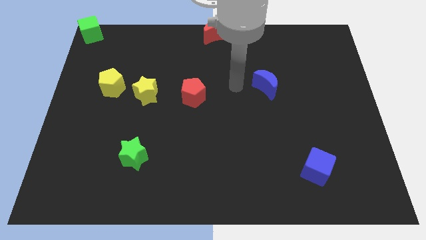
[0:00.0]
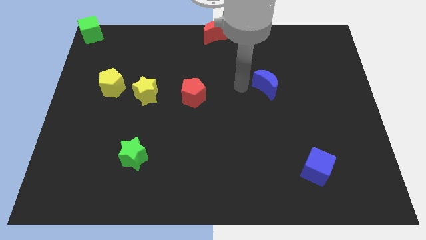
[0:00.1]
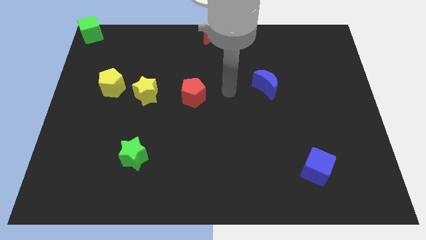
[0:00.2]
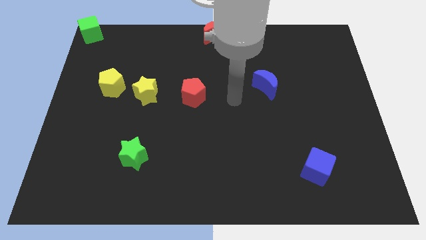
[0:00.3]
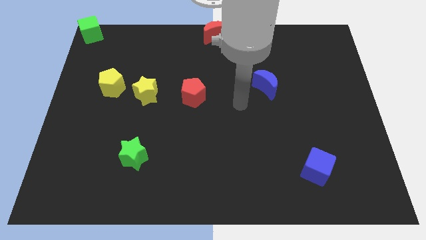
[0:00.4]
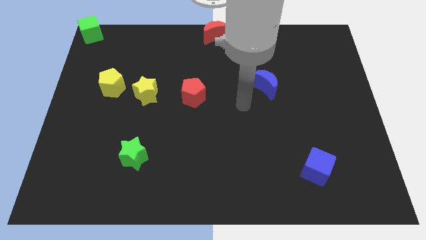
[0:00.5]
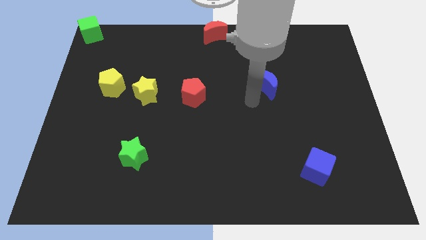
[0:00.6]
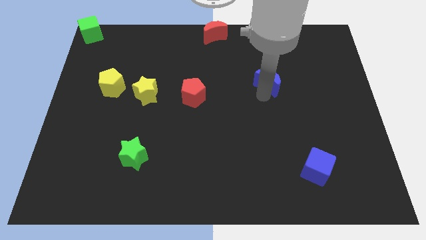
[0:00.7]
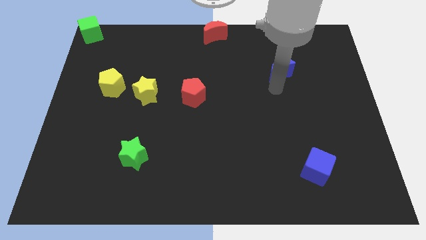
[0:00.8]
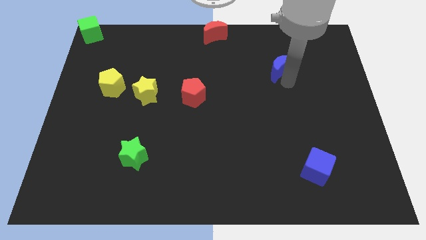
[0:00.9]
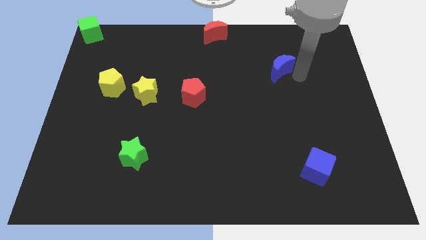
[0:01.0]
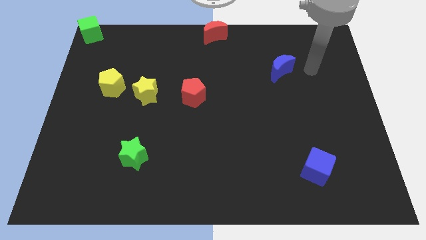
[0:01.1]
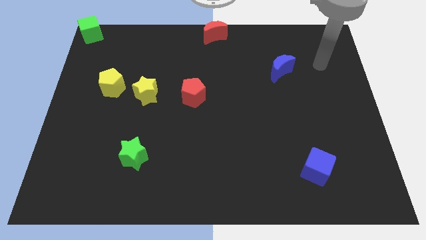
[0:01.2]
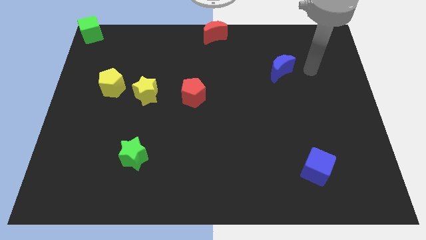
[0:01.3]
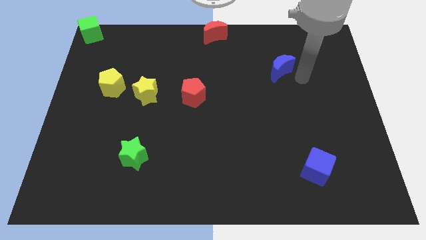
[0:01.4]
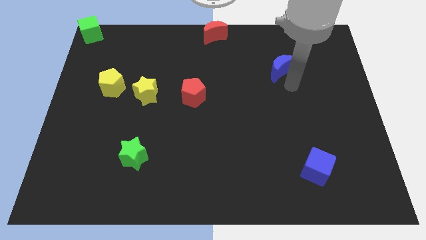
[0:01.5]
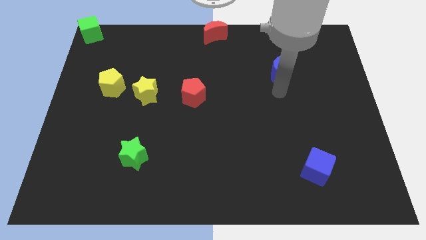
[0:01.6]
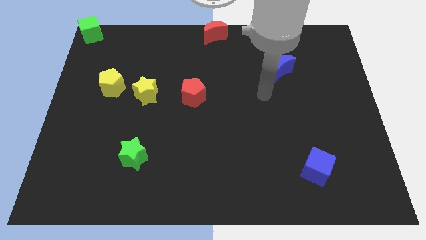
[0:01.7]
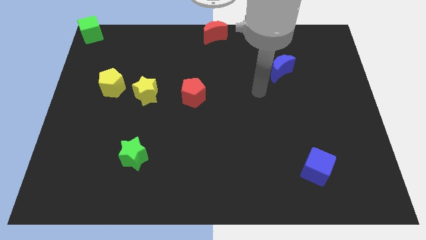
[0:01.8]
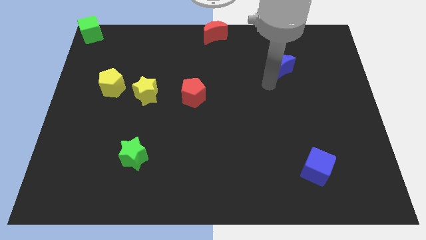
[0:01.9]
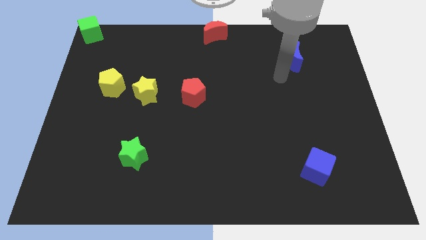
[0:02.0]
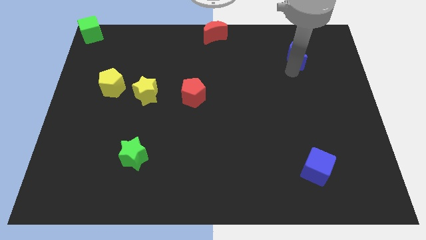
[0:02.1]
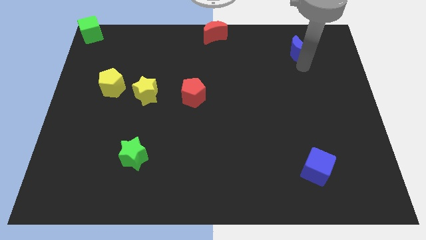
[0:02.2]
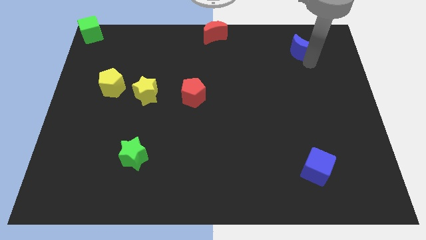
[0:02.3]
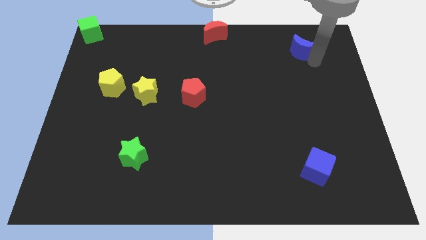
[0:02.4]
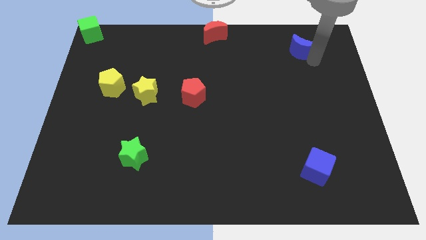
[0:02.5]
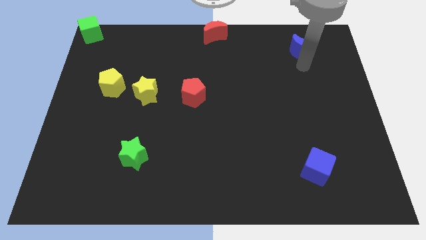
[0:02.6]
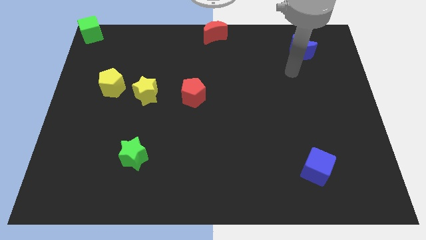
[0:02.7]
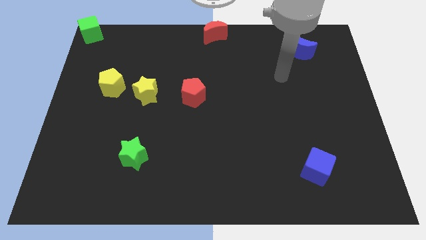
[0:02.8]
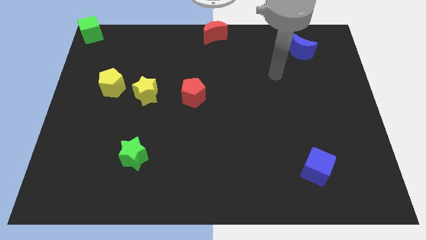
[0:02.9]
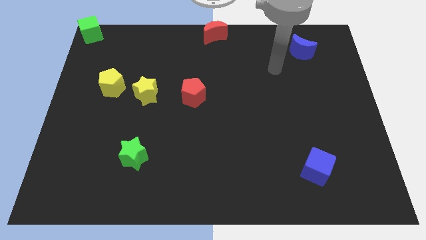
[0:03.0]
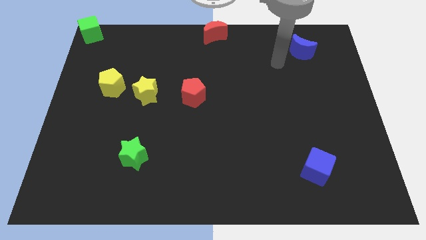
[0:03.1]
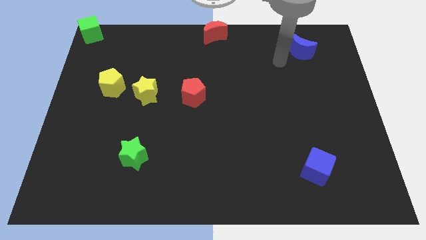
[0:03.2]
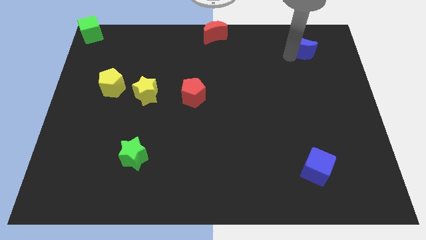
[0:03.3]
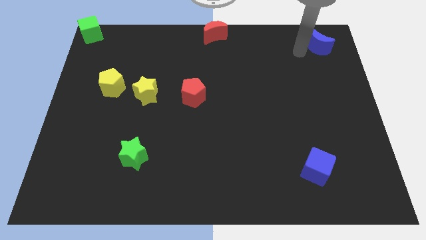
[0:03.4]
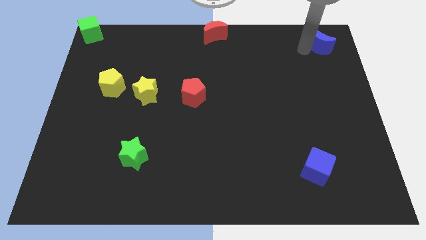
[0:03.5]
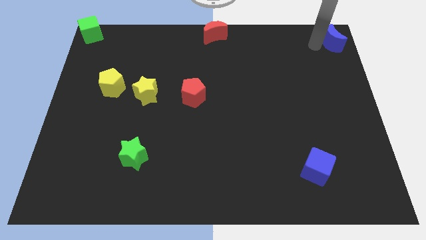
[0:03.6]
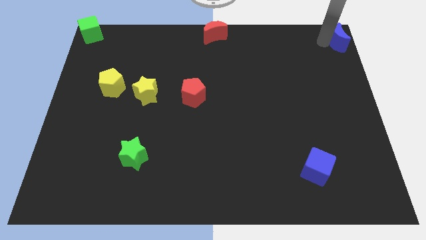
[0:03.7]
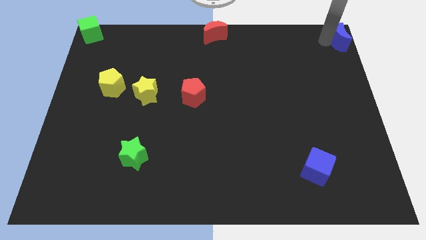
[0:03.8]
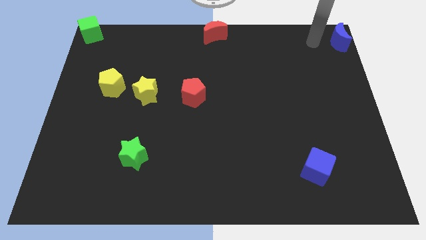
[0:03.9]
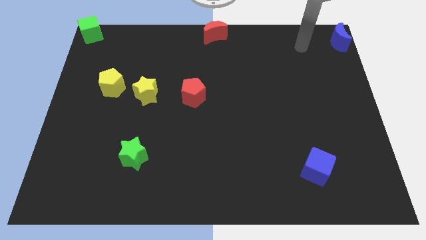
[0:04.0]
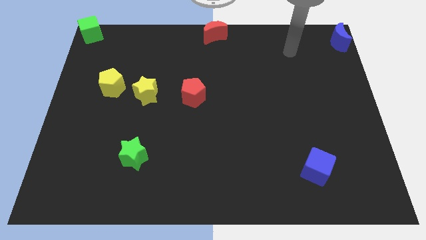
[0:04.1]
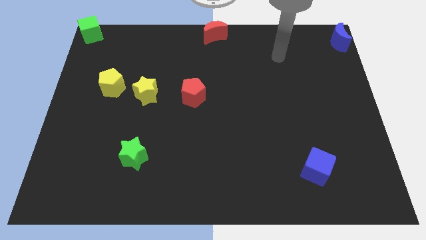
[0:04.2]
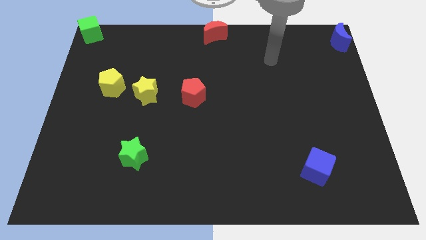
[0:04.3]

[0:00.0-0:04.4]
move the blue moon to the top right corner of the board

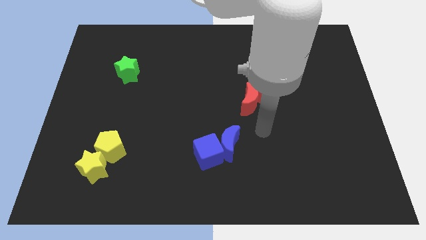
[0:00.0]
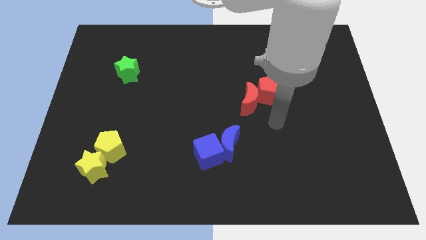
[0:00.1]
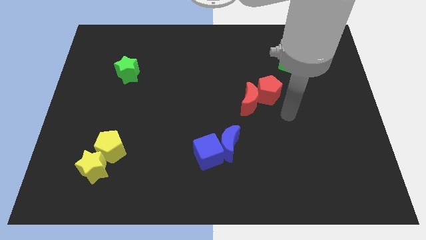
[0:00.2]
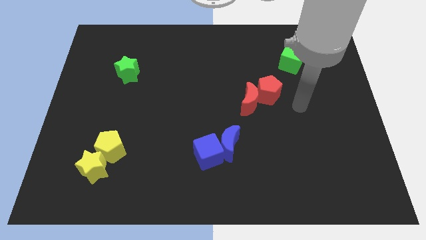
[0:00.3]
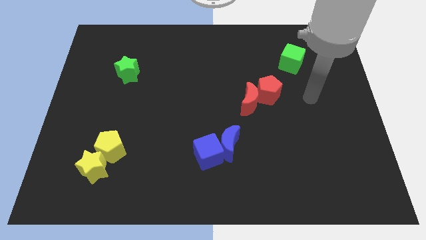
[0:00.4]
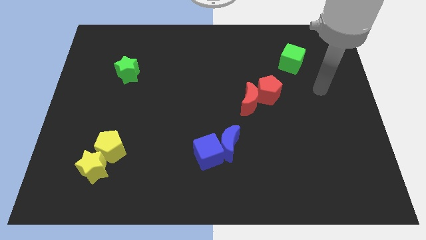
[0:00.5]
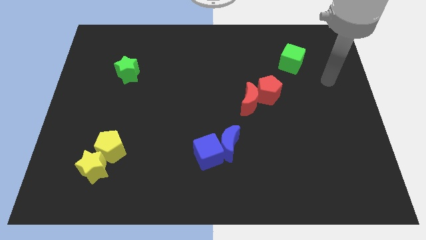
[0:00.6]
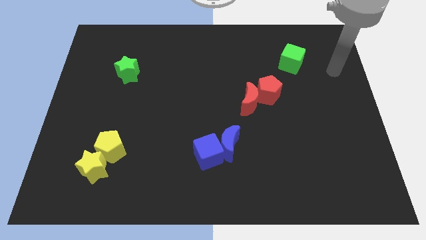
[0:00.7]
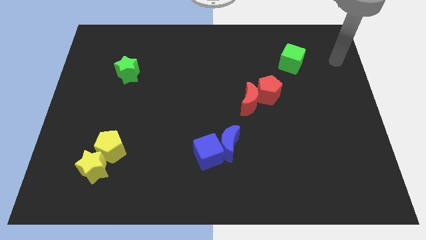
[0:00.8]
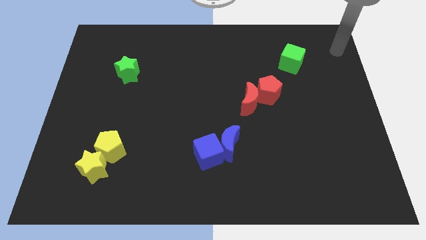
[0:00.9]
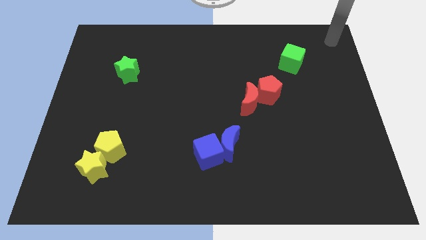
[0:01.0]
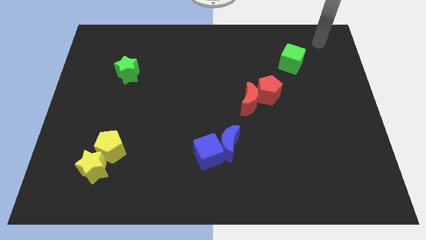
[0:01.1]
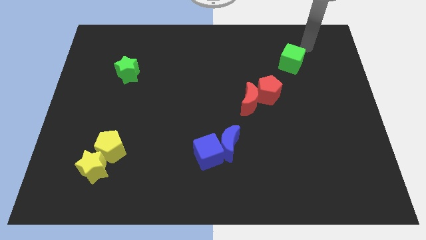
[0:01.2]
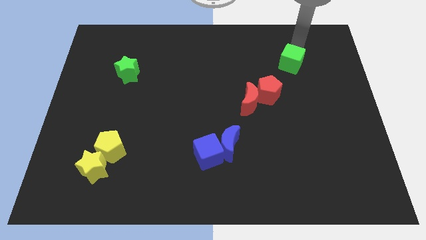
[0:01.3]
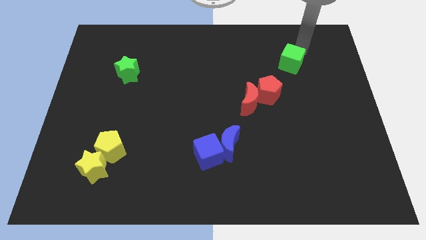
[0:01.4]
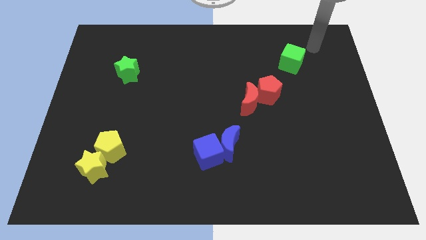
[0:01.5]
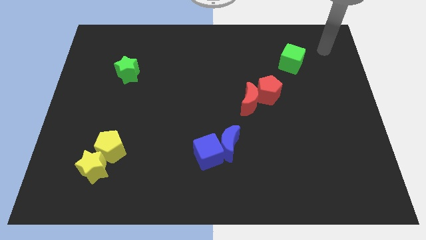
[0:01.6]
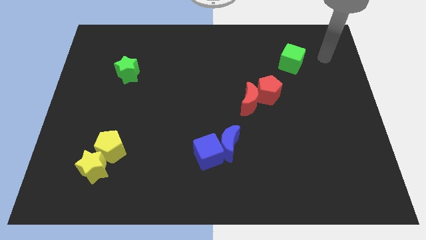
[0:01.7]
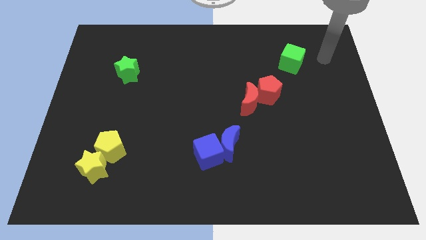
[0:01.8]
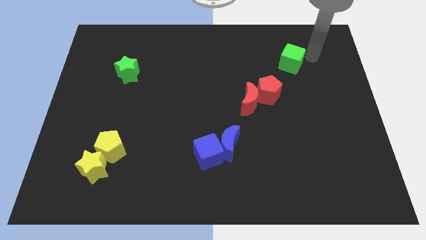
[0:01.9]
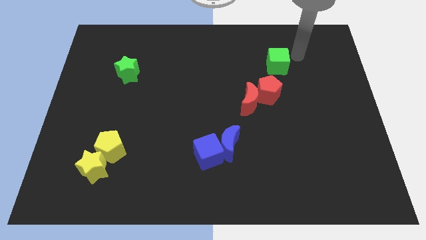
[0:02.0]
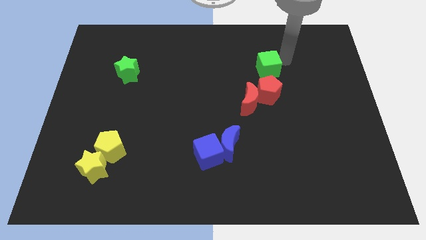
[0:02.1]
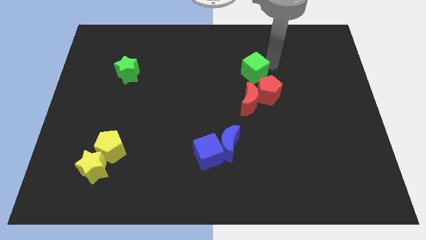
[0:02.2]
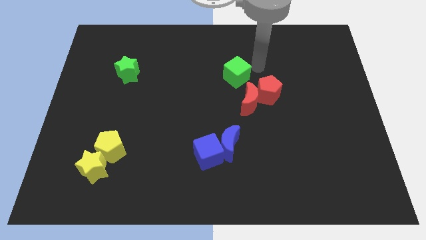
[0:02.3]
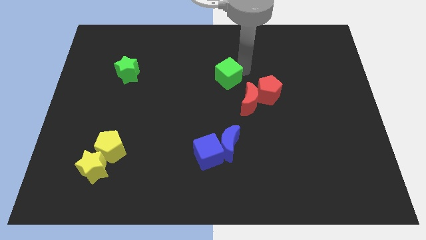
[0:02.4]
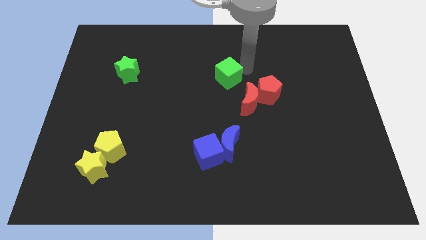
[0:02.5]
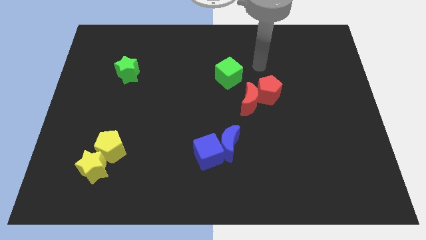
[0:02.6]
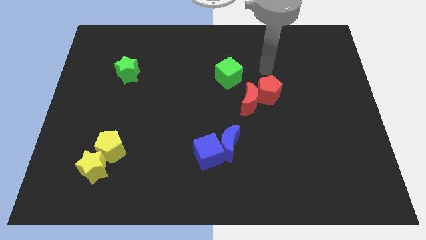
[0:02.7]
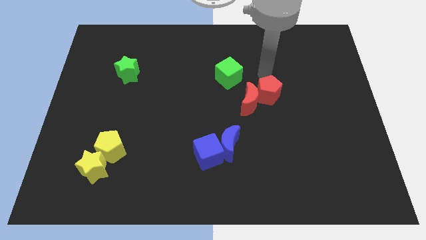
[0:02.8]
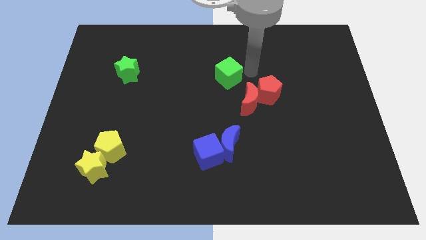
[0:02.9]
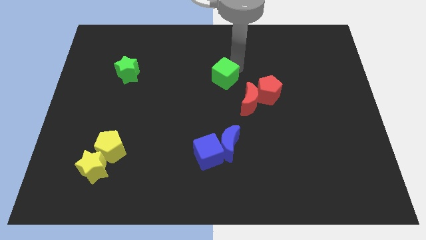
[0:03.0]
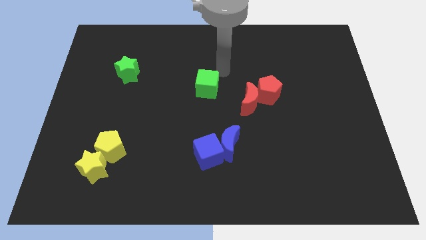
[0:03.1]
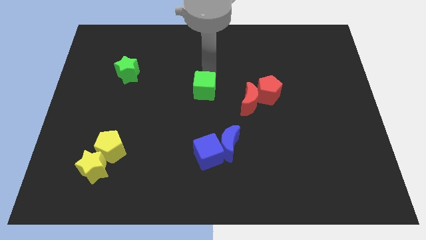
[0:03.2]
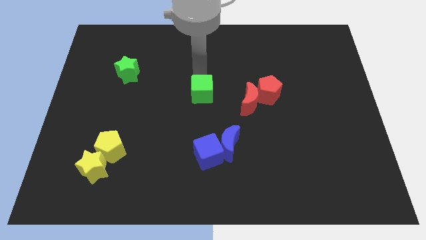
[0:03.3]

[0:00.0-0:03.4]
move the green cube vertically to the top side of the blue cube

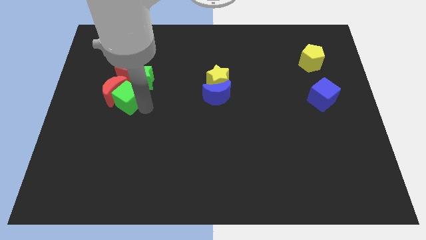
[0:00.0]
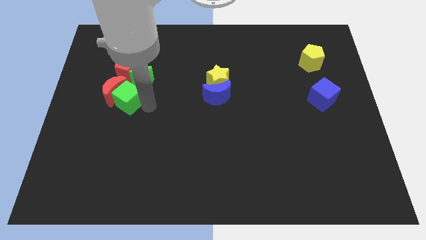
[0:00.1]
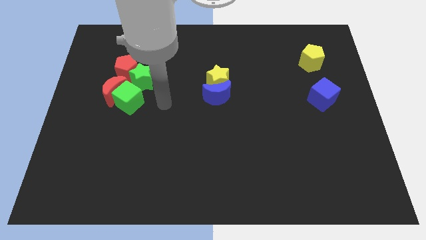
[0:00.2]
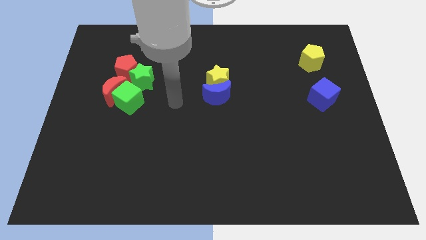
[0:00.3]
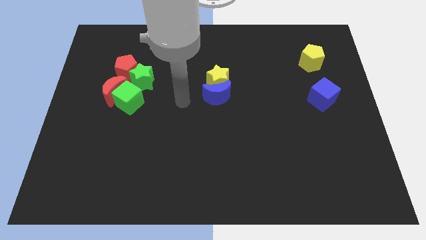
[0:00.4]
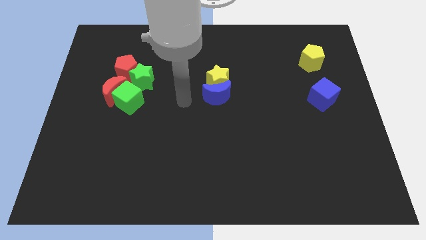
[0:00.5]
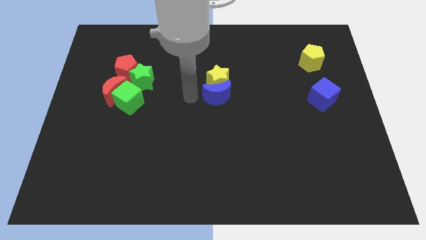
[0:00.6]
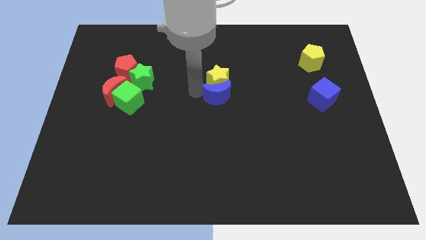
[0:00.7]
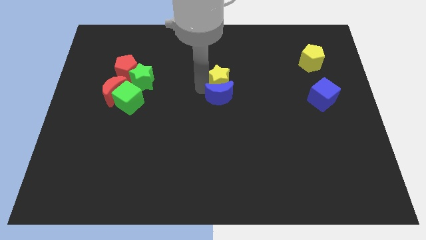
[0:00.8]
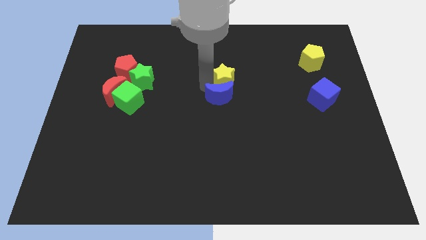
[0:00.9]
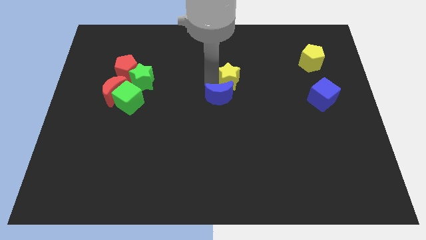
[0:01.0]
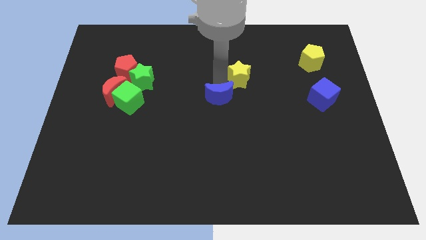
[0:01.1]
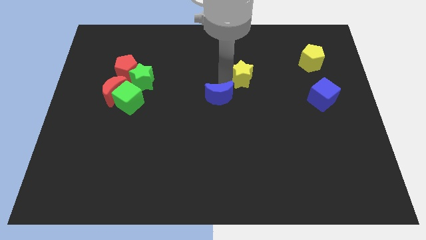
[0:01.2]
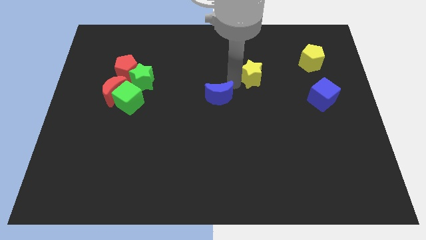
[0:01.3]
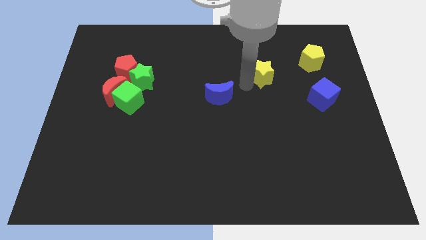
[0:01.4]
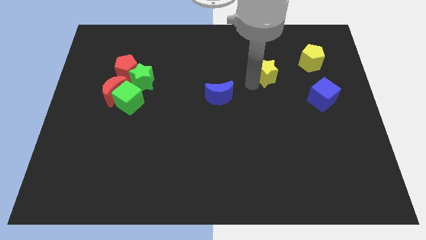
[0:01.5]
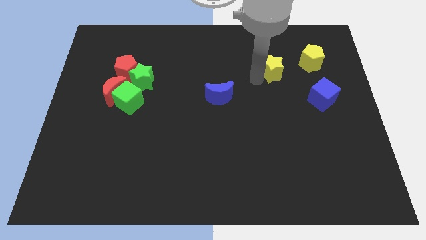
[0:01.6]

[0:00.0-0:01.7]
move the yellow star parallel to the yellow pentagon
